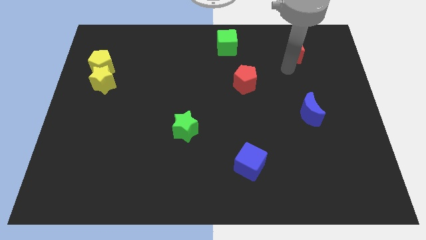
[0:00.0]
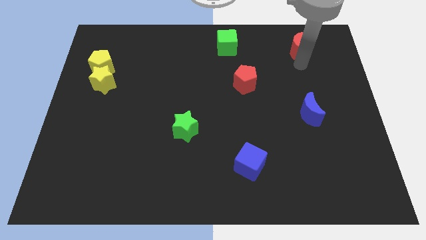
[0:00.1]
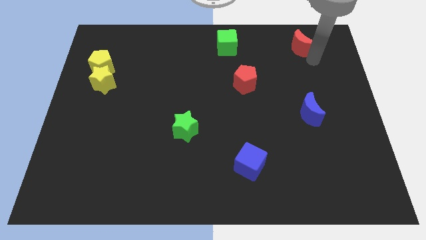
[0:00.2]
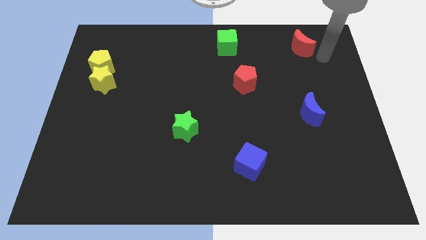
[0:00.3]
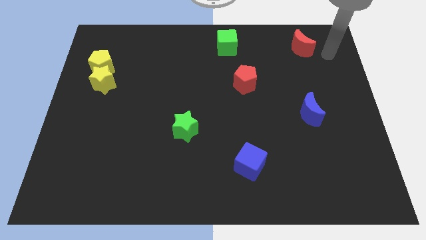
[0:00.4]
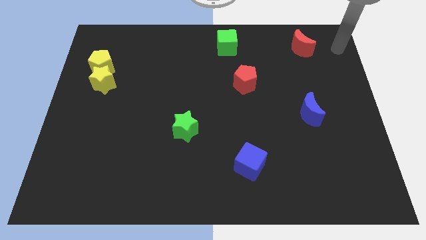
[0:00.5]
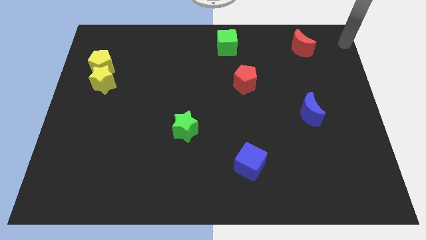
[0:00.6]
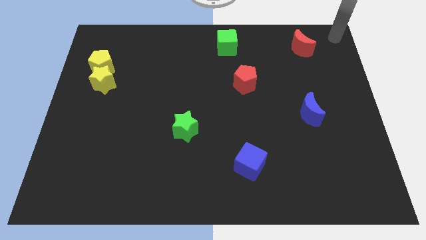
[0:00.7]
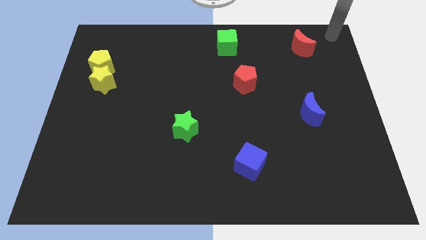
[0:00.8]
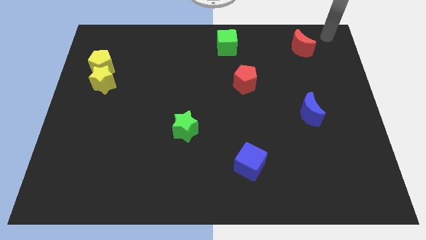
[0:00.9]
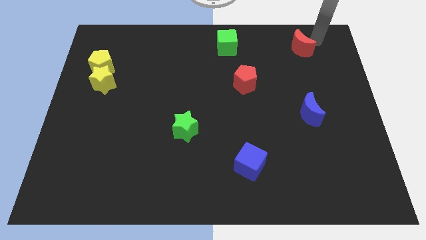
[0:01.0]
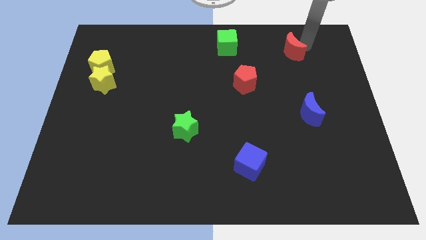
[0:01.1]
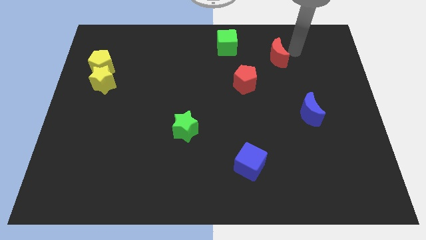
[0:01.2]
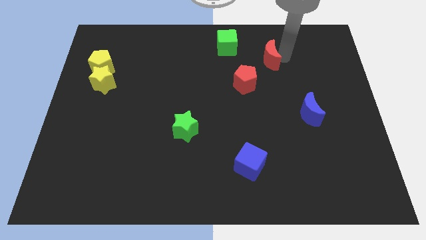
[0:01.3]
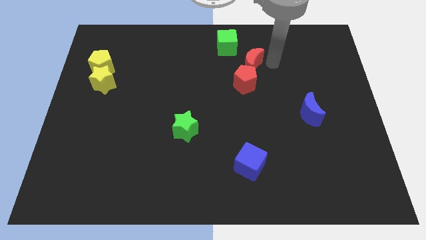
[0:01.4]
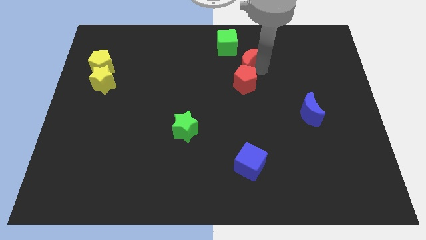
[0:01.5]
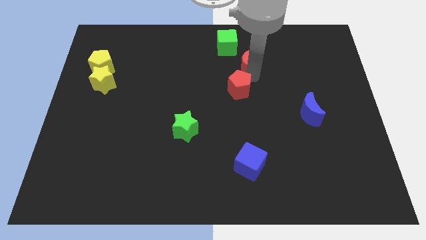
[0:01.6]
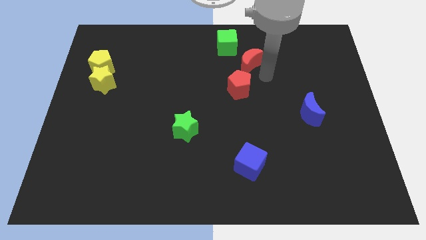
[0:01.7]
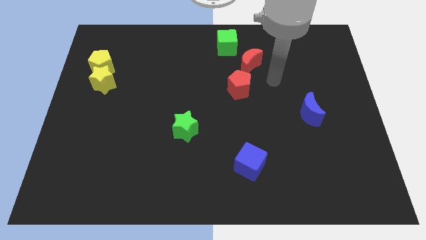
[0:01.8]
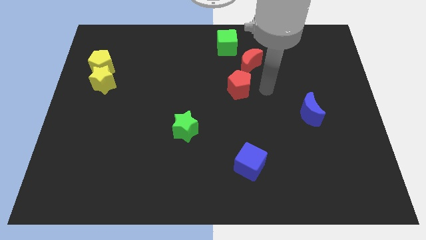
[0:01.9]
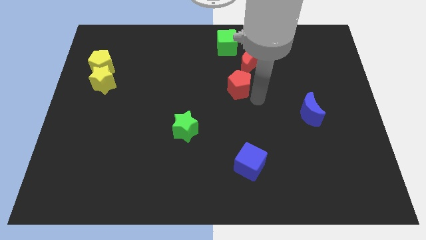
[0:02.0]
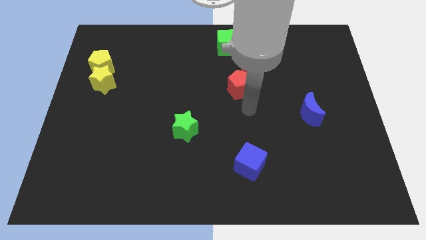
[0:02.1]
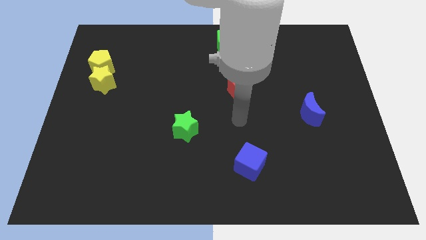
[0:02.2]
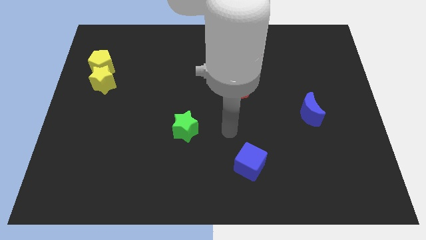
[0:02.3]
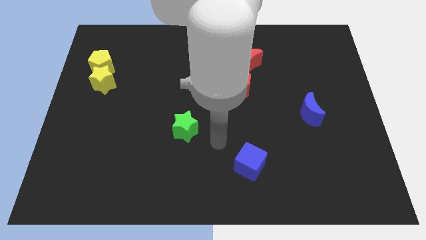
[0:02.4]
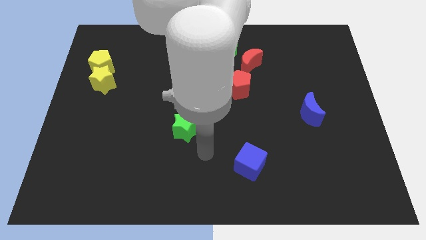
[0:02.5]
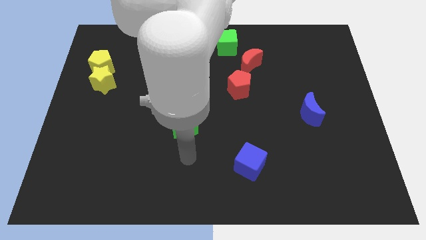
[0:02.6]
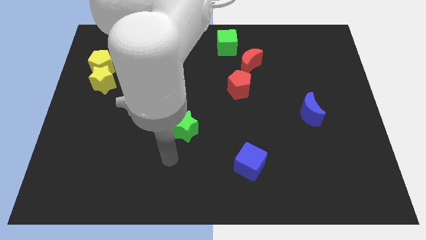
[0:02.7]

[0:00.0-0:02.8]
move the red moon near the red pentagon

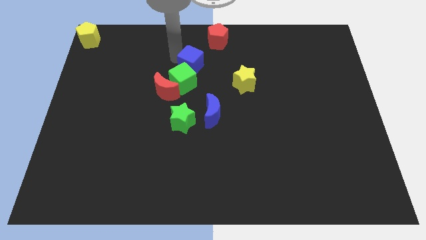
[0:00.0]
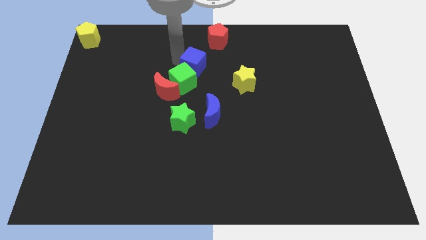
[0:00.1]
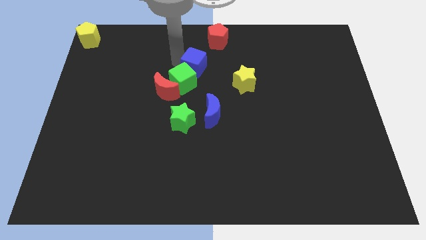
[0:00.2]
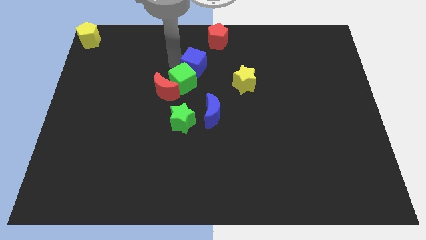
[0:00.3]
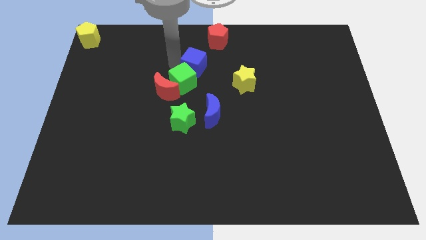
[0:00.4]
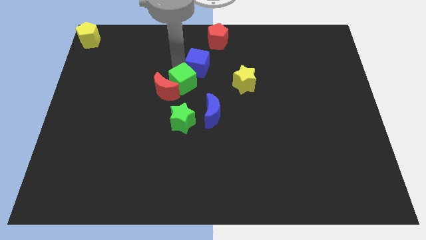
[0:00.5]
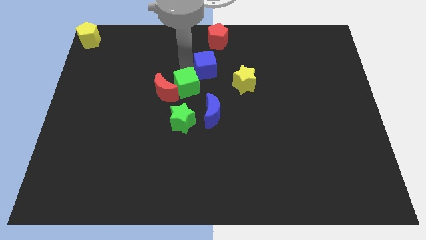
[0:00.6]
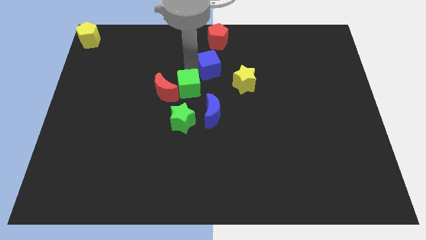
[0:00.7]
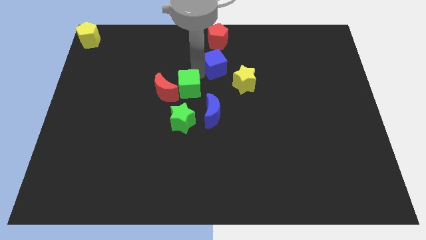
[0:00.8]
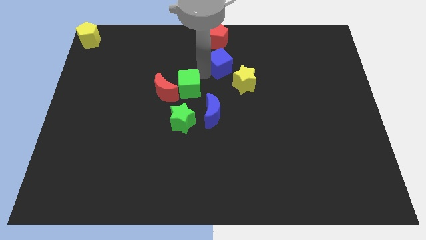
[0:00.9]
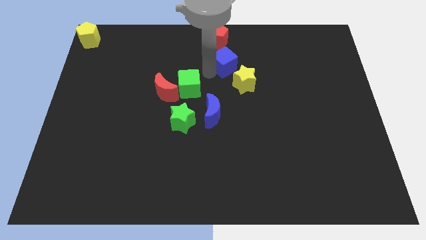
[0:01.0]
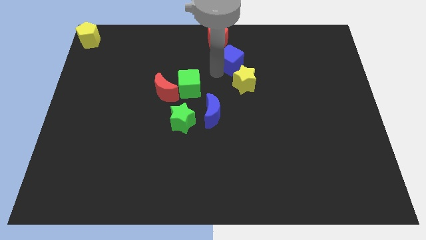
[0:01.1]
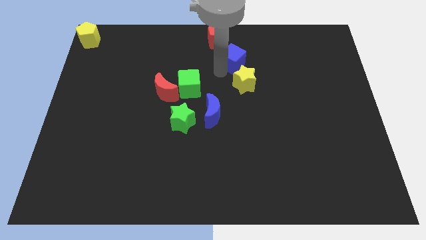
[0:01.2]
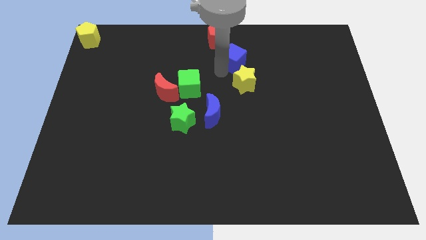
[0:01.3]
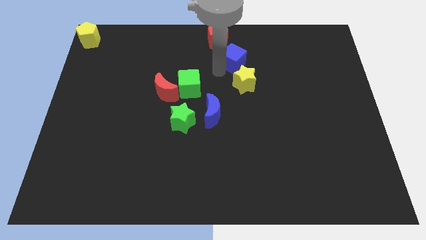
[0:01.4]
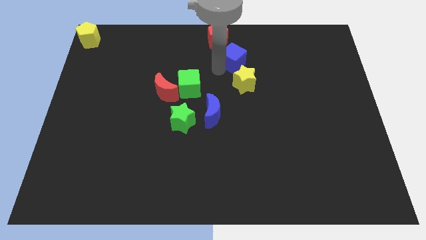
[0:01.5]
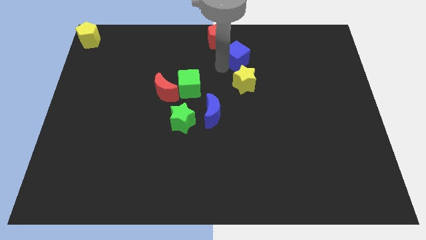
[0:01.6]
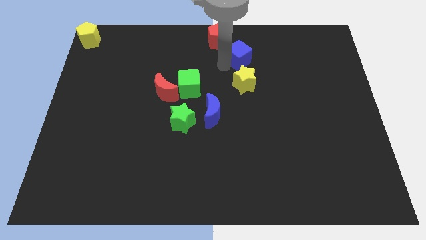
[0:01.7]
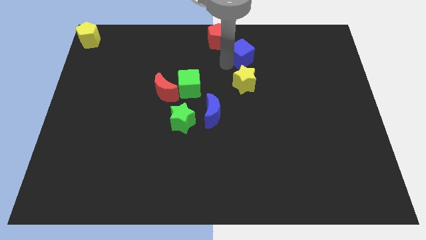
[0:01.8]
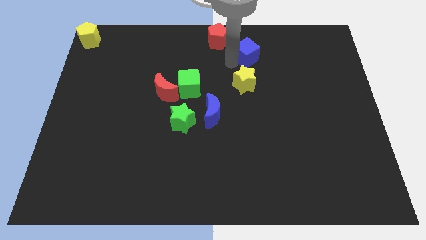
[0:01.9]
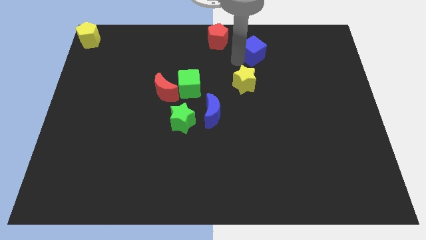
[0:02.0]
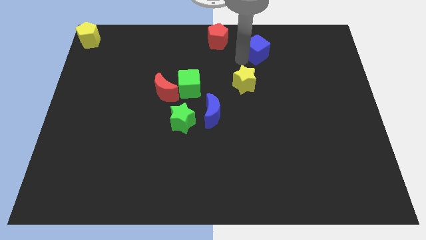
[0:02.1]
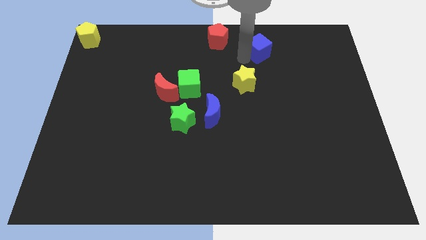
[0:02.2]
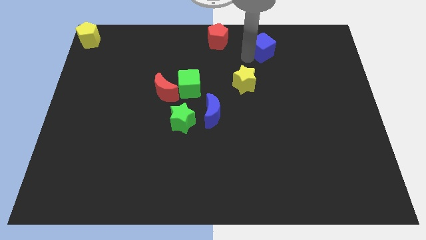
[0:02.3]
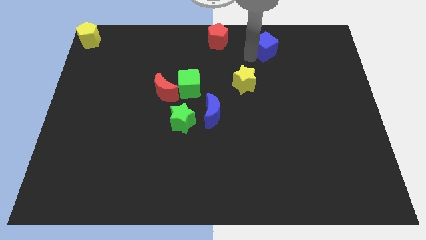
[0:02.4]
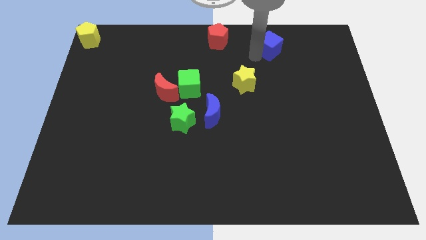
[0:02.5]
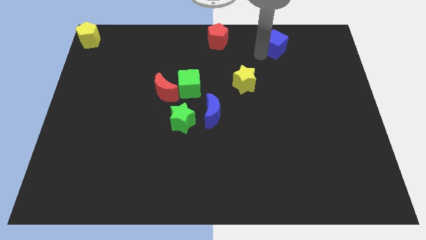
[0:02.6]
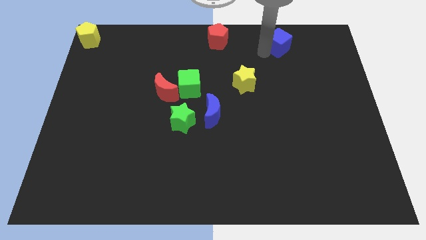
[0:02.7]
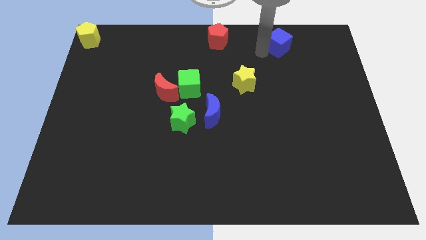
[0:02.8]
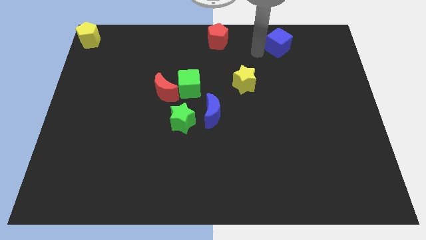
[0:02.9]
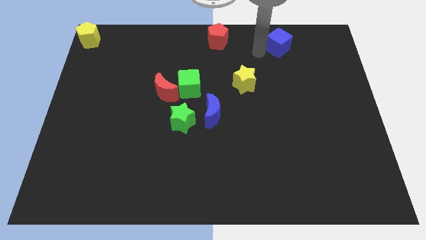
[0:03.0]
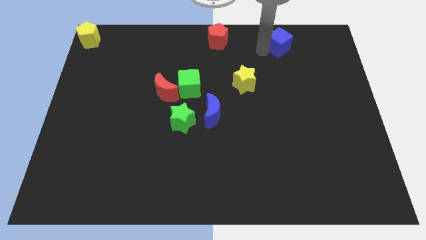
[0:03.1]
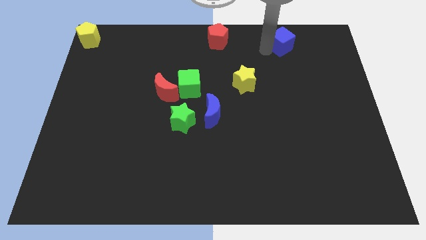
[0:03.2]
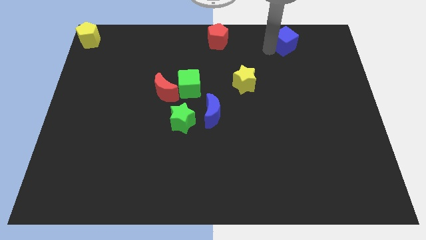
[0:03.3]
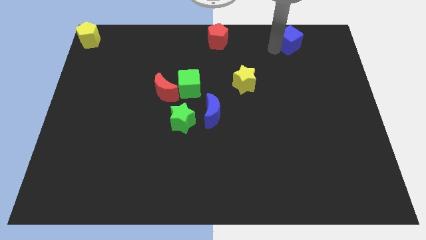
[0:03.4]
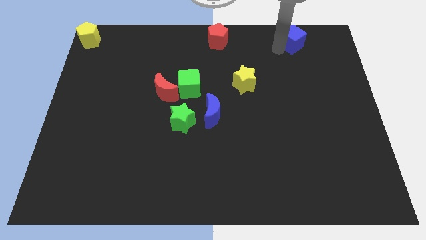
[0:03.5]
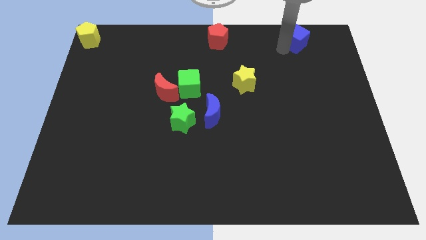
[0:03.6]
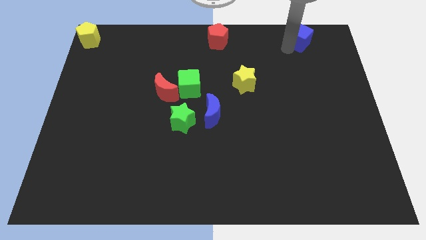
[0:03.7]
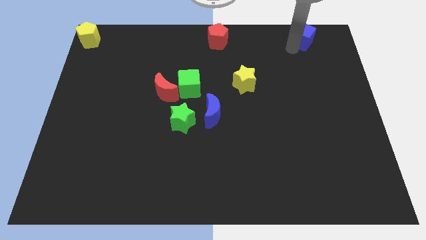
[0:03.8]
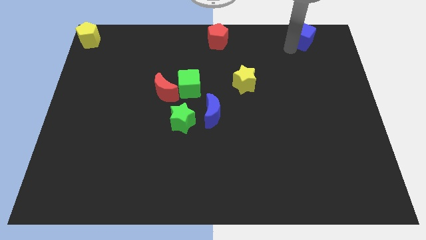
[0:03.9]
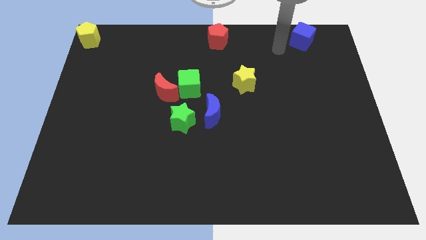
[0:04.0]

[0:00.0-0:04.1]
separate blue cube from green cube

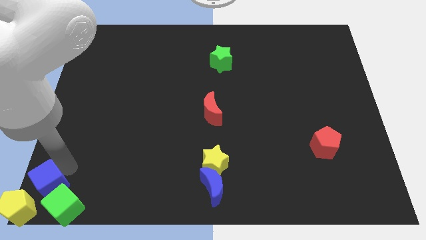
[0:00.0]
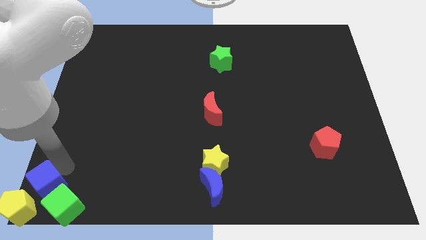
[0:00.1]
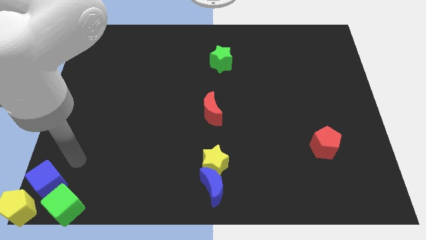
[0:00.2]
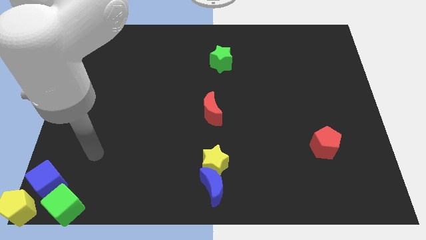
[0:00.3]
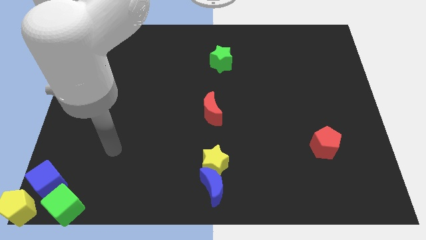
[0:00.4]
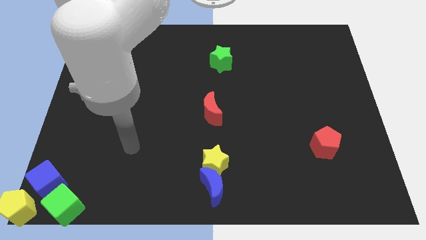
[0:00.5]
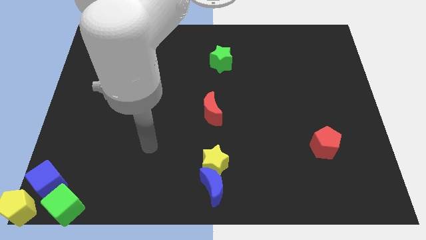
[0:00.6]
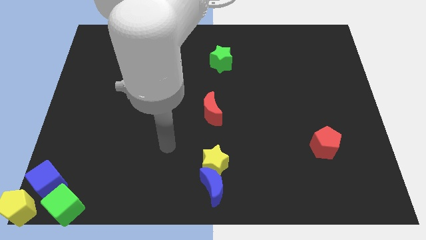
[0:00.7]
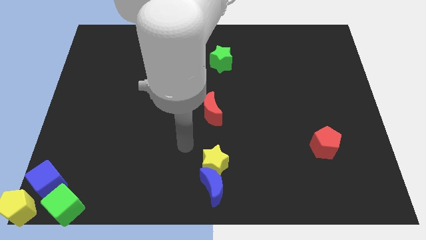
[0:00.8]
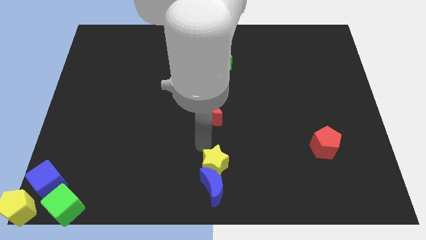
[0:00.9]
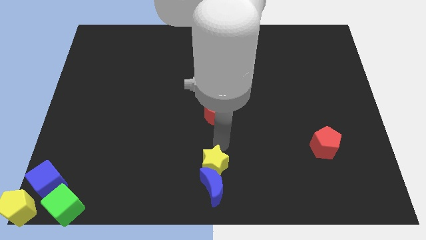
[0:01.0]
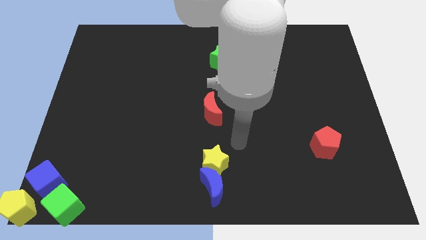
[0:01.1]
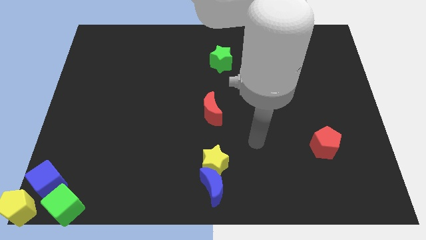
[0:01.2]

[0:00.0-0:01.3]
move arm away from blue cube

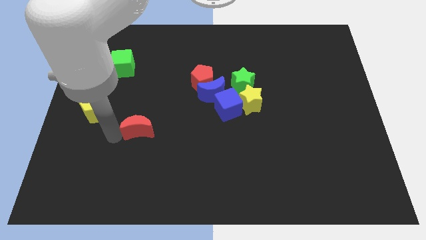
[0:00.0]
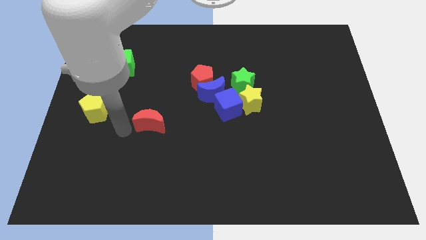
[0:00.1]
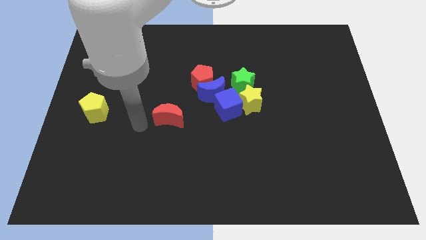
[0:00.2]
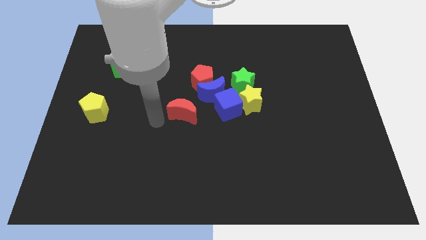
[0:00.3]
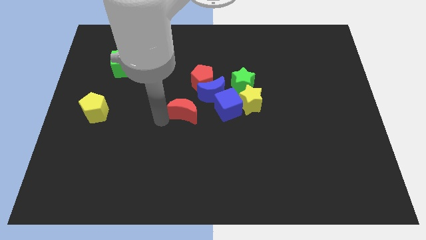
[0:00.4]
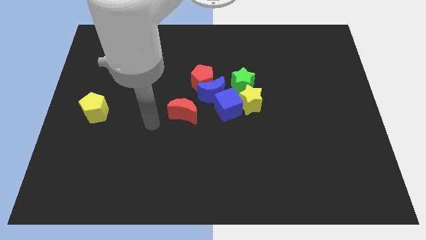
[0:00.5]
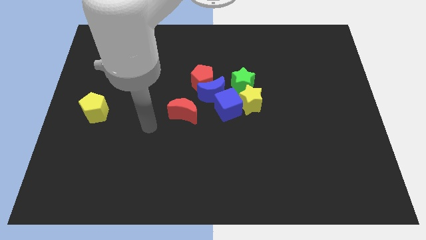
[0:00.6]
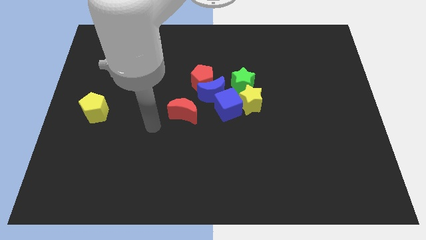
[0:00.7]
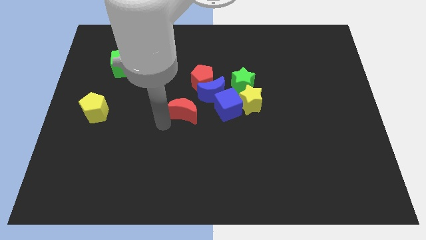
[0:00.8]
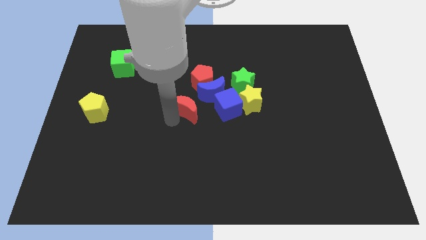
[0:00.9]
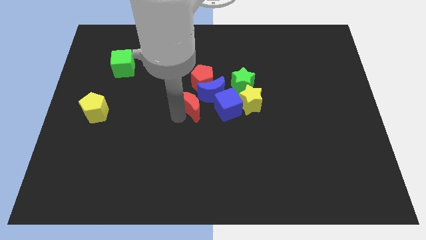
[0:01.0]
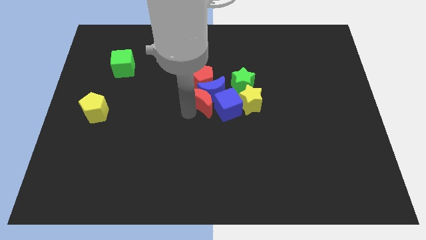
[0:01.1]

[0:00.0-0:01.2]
place the red crescent at the center of the board
